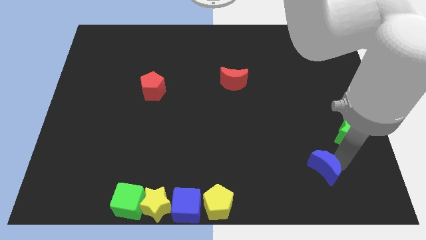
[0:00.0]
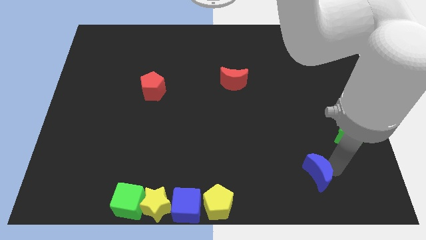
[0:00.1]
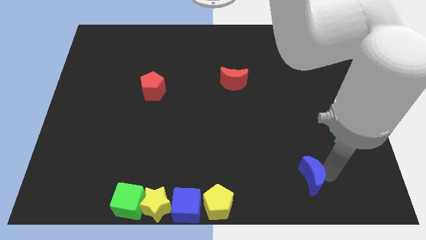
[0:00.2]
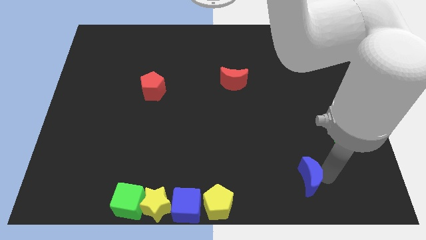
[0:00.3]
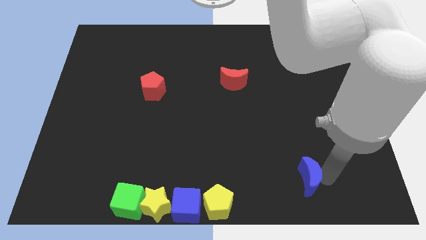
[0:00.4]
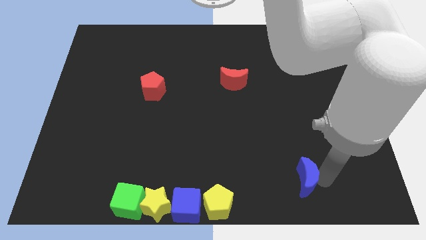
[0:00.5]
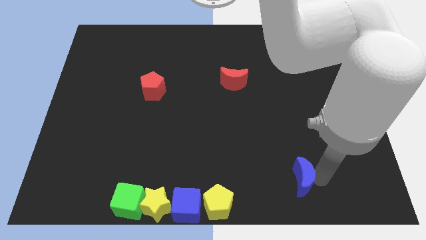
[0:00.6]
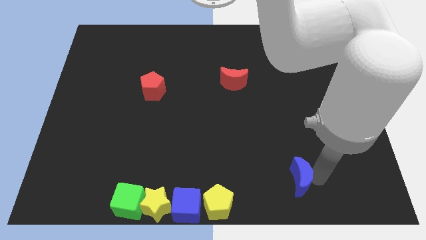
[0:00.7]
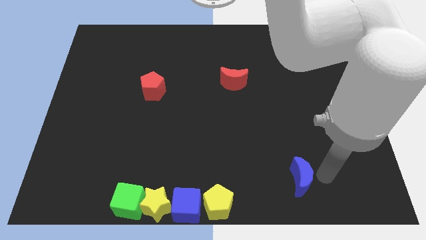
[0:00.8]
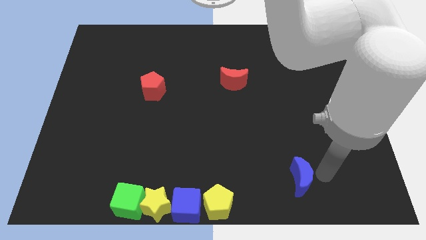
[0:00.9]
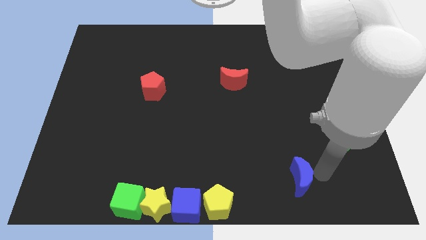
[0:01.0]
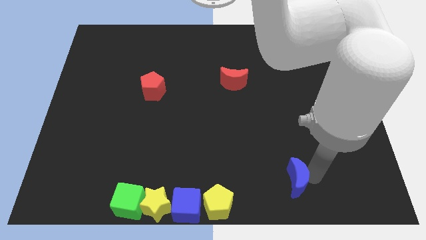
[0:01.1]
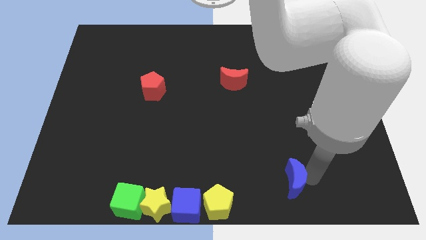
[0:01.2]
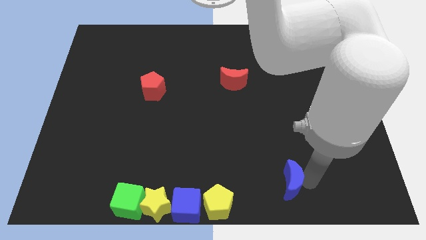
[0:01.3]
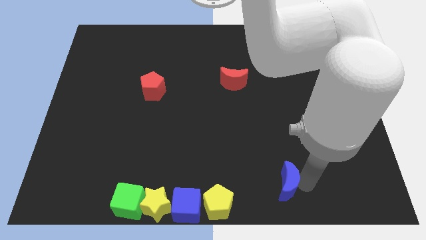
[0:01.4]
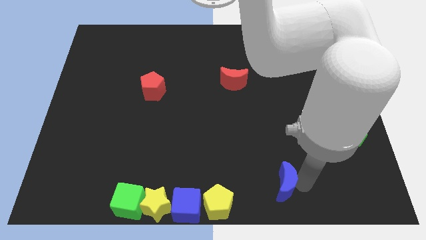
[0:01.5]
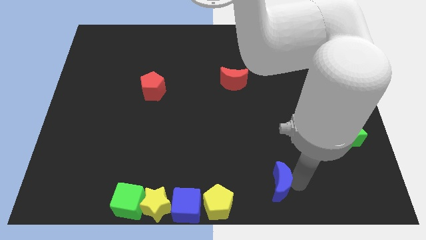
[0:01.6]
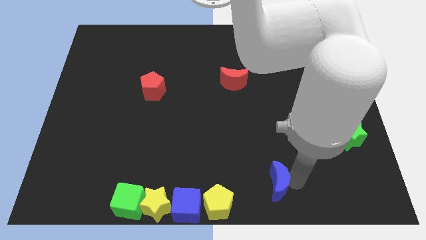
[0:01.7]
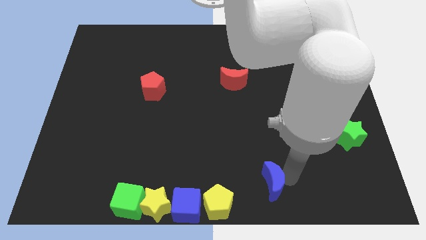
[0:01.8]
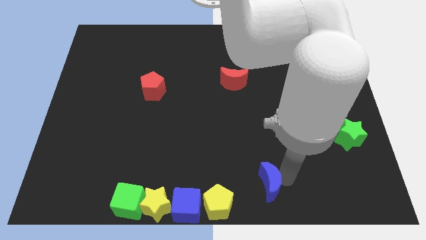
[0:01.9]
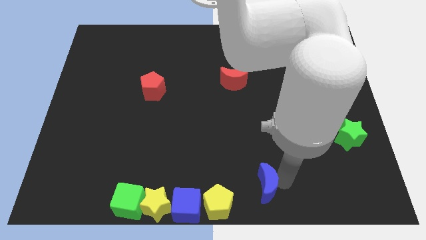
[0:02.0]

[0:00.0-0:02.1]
move the blue crescent towards the bottom center of the board

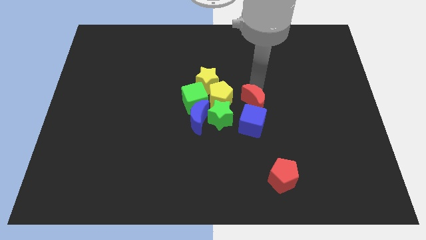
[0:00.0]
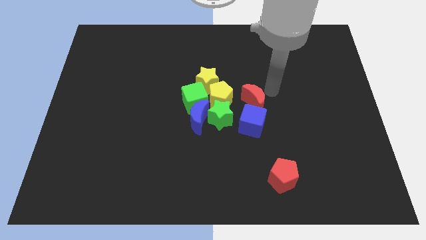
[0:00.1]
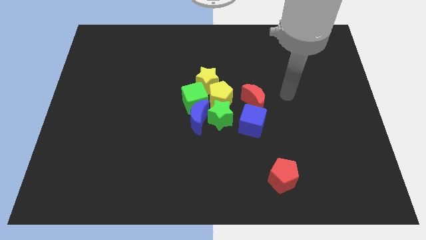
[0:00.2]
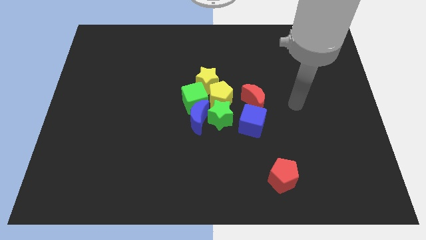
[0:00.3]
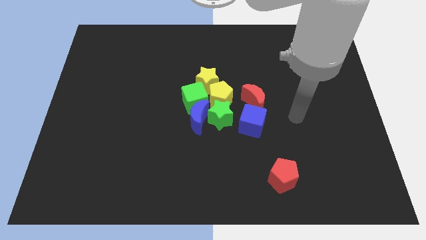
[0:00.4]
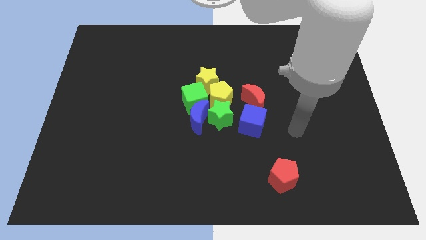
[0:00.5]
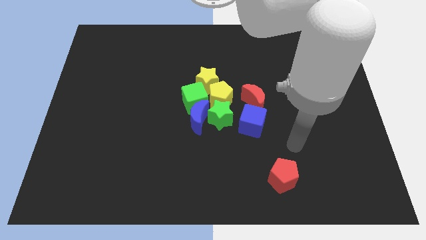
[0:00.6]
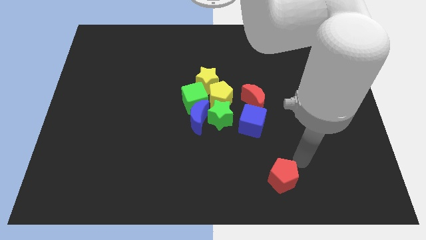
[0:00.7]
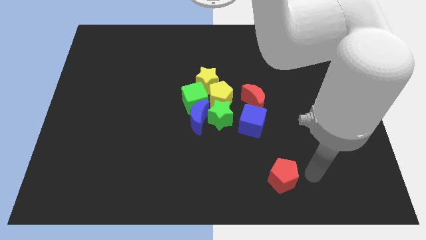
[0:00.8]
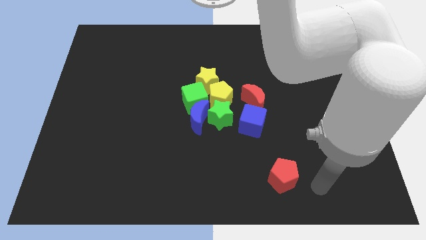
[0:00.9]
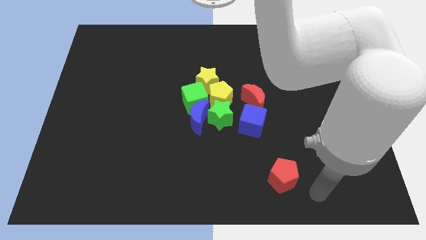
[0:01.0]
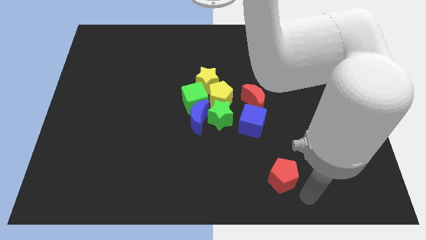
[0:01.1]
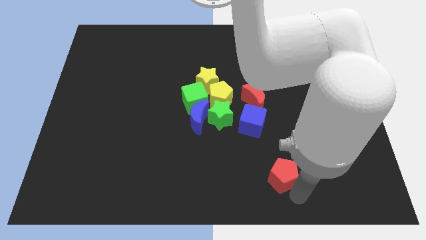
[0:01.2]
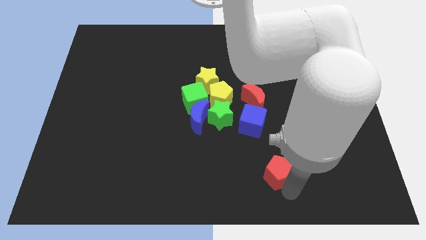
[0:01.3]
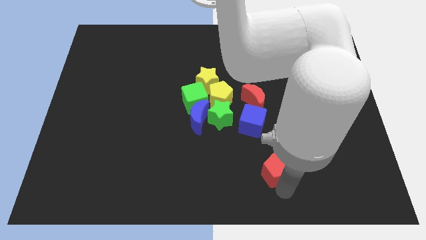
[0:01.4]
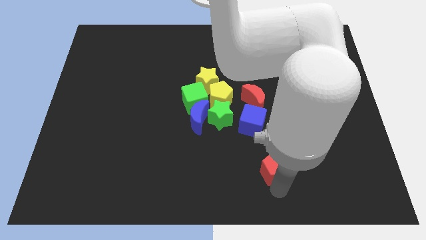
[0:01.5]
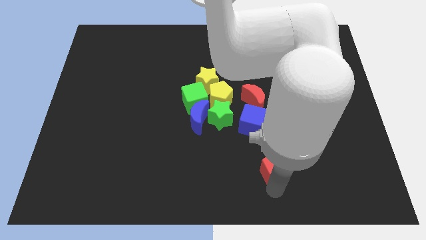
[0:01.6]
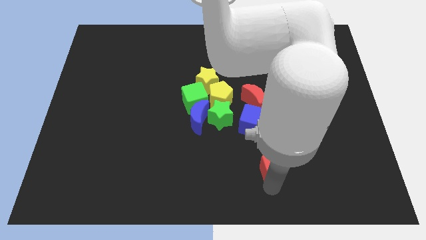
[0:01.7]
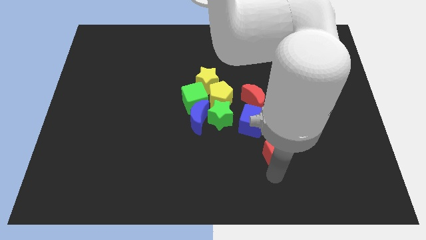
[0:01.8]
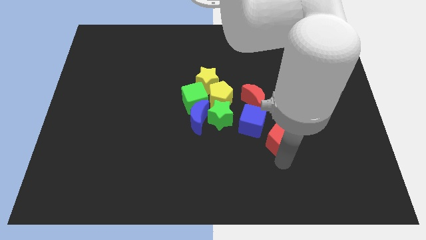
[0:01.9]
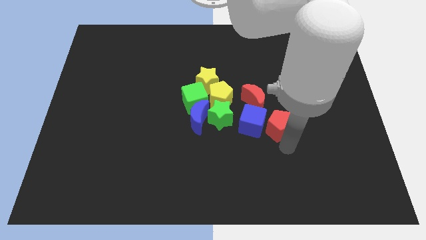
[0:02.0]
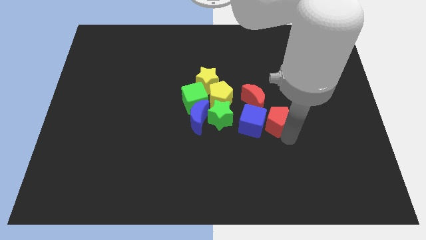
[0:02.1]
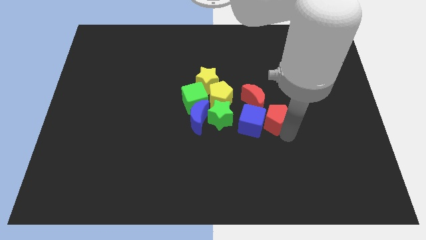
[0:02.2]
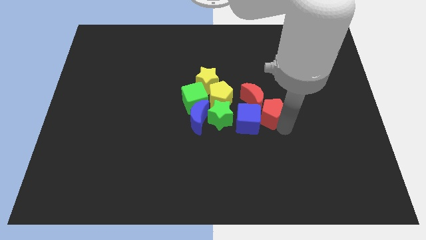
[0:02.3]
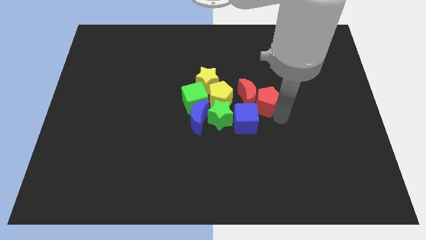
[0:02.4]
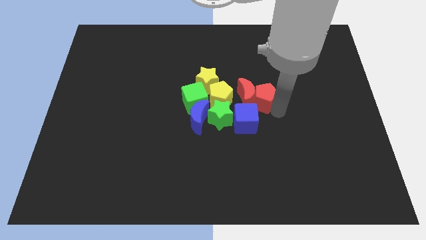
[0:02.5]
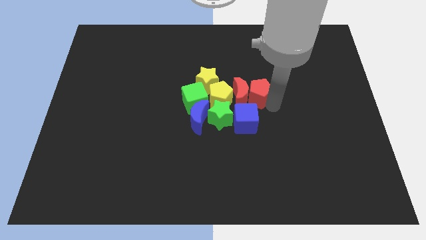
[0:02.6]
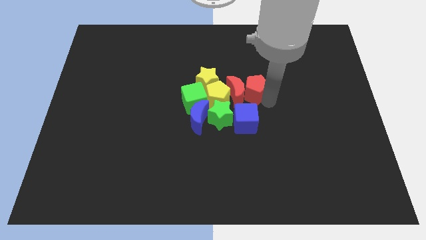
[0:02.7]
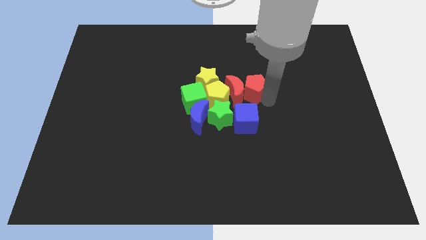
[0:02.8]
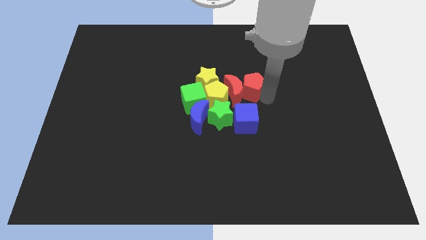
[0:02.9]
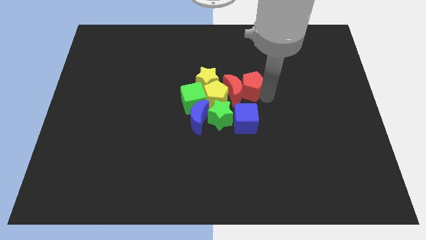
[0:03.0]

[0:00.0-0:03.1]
place the red pentagon to the right side of red moon

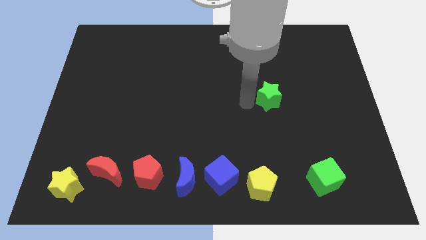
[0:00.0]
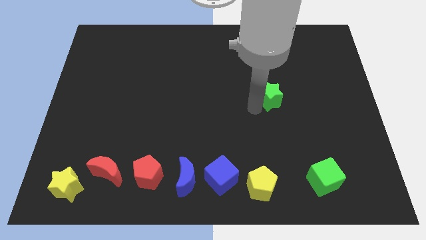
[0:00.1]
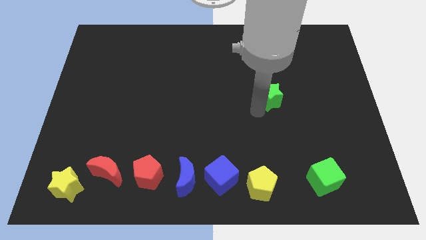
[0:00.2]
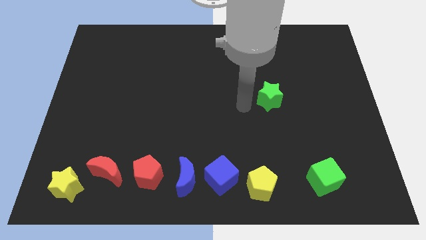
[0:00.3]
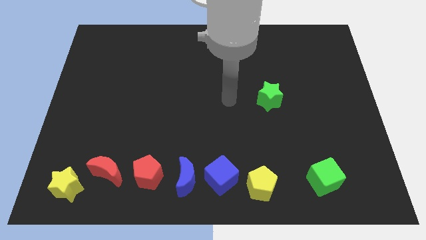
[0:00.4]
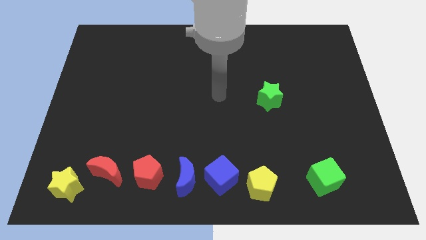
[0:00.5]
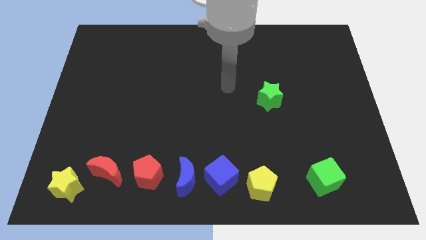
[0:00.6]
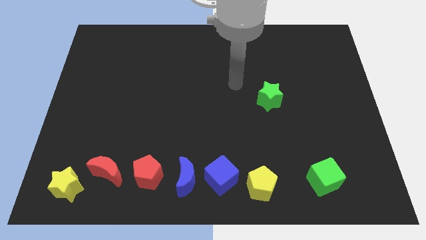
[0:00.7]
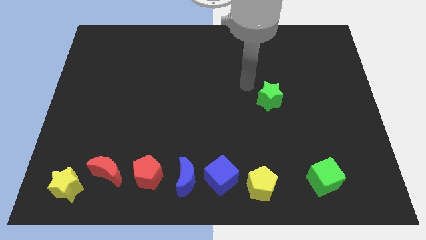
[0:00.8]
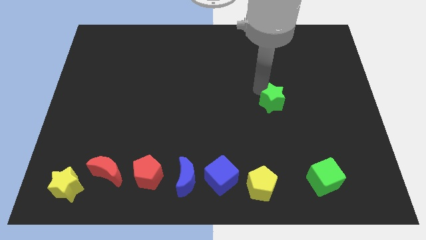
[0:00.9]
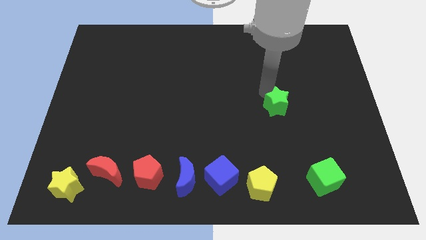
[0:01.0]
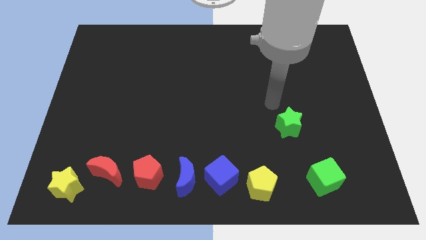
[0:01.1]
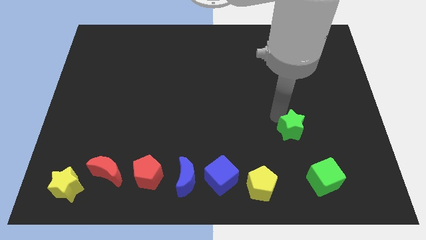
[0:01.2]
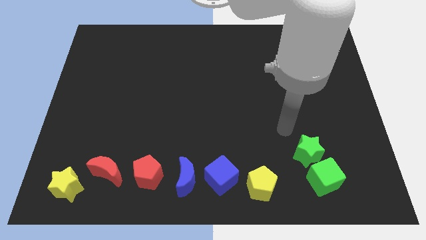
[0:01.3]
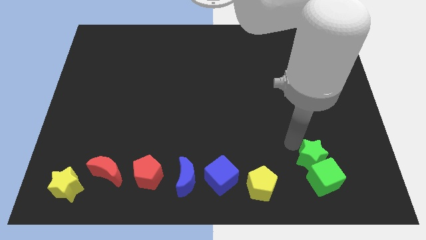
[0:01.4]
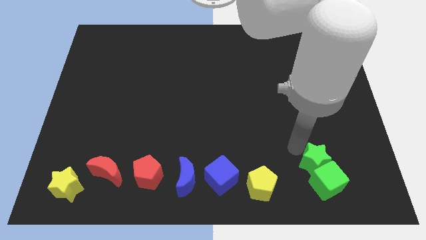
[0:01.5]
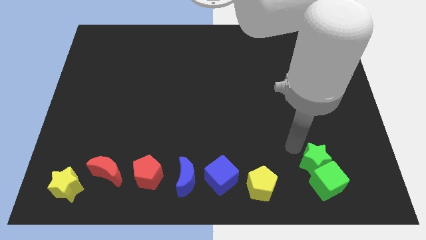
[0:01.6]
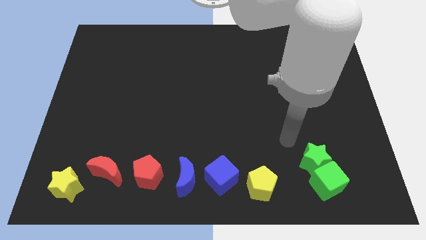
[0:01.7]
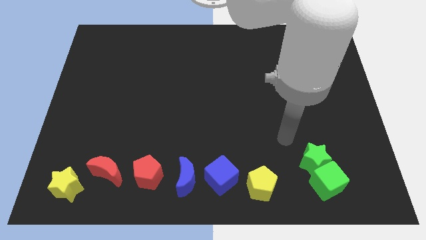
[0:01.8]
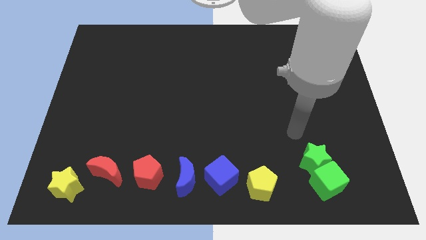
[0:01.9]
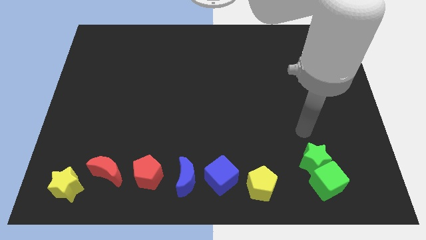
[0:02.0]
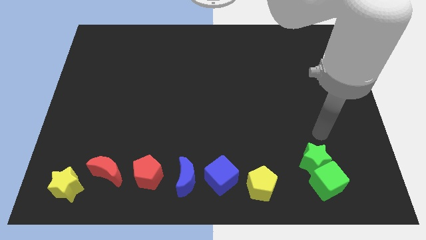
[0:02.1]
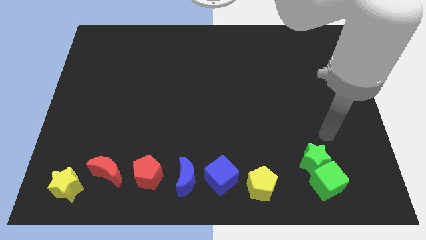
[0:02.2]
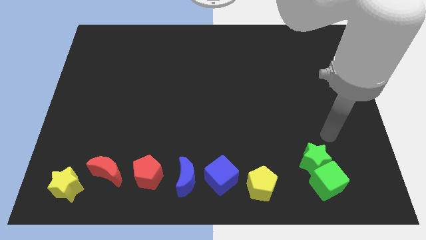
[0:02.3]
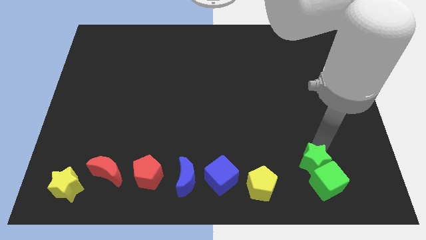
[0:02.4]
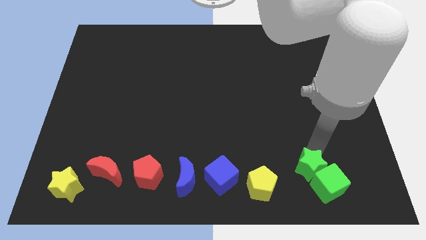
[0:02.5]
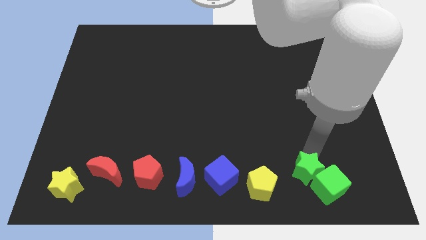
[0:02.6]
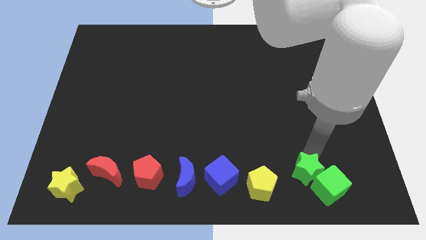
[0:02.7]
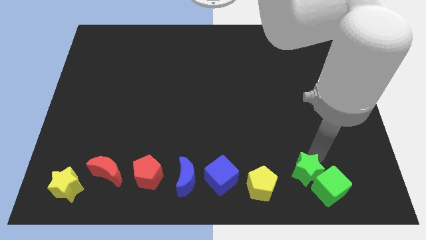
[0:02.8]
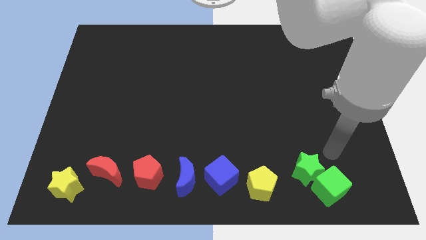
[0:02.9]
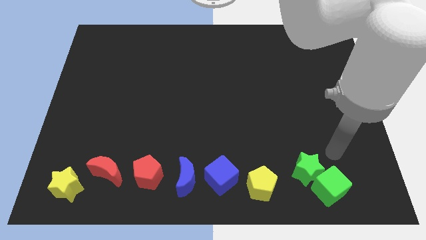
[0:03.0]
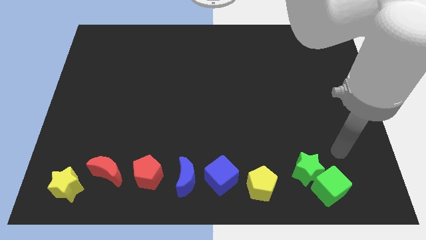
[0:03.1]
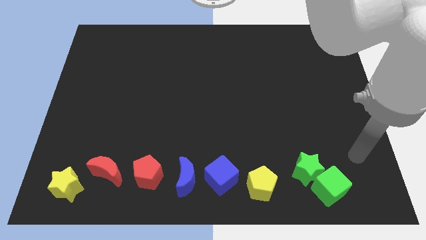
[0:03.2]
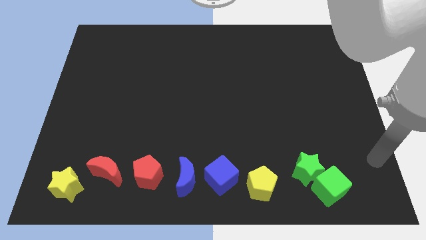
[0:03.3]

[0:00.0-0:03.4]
place the green star into the green cube

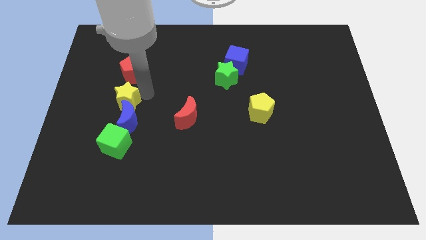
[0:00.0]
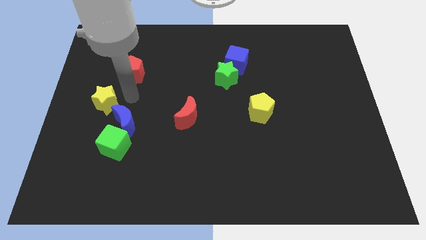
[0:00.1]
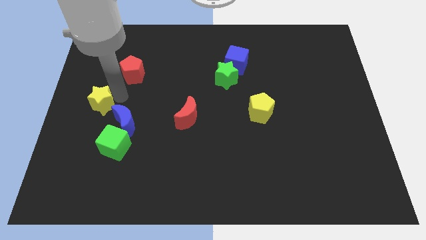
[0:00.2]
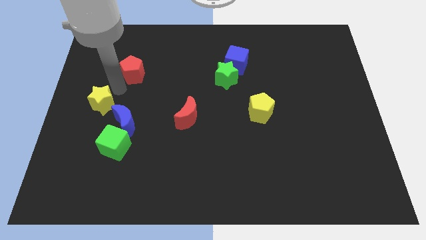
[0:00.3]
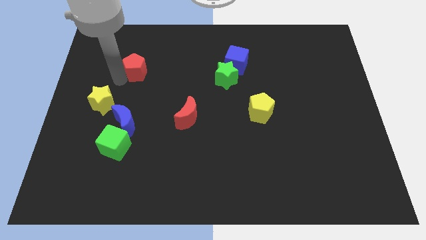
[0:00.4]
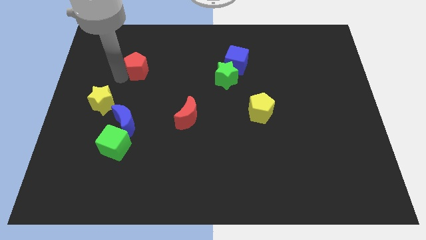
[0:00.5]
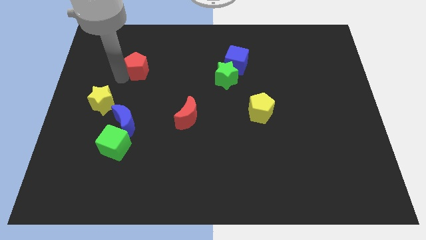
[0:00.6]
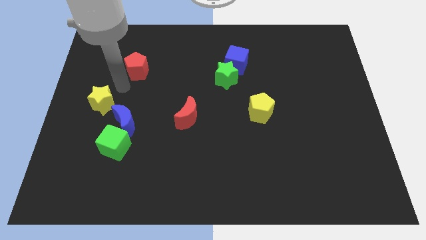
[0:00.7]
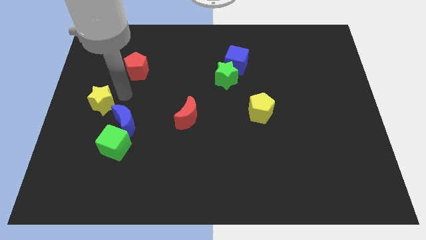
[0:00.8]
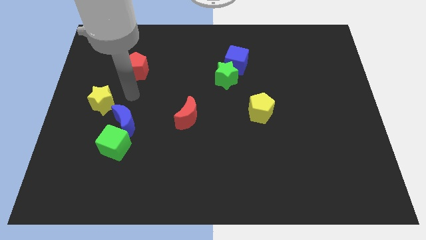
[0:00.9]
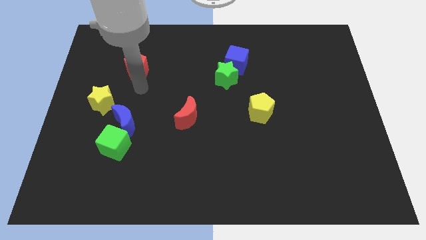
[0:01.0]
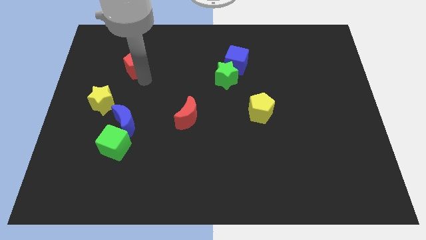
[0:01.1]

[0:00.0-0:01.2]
separate the yellow star from the group of blocks
